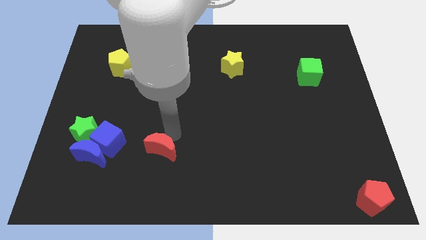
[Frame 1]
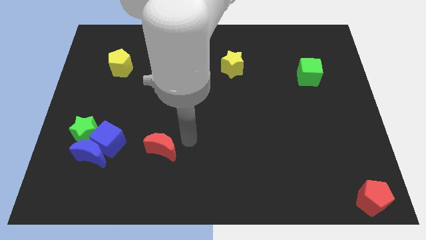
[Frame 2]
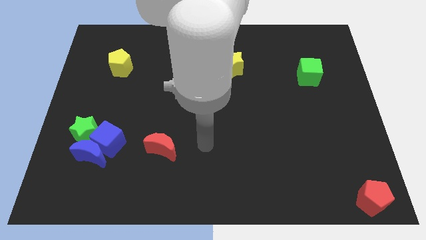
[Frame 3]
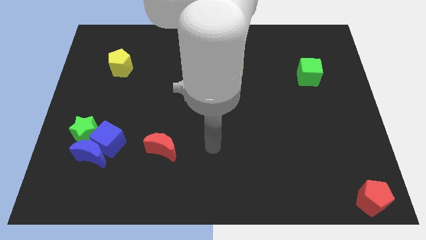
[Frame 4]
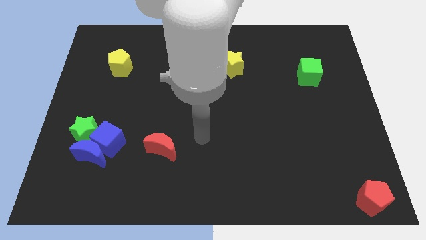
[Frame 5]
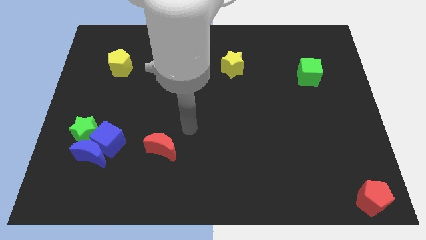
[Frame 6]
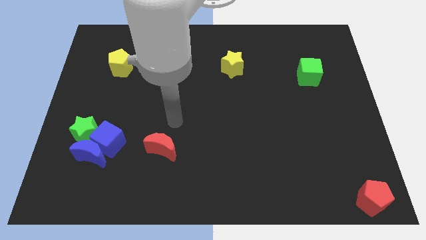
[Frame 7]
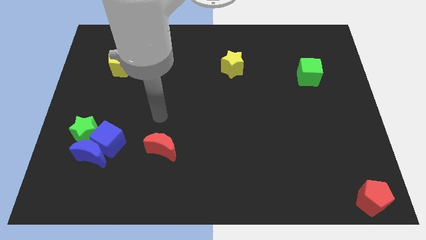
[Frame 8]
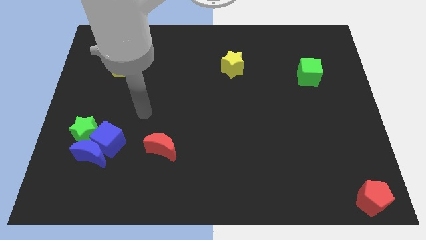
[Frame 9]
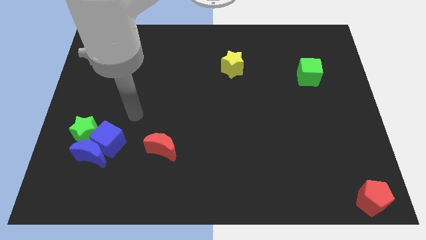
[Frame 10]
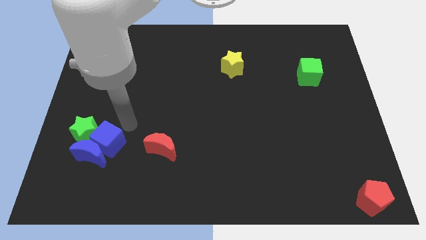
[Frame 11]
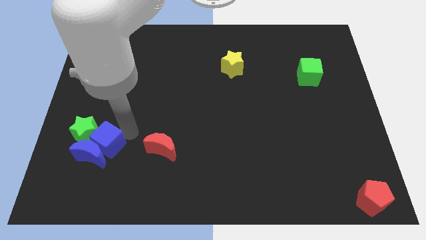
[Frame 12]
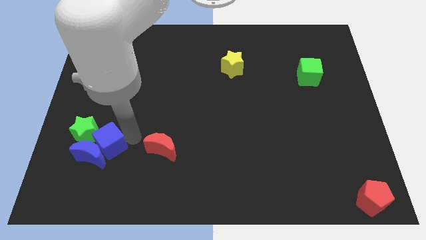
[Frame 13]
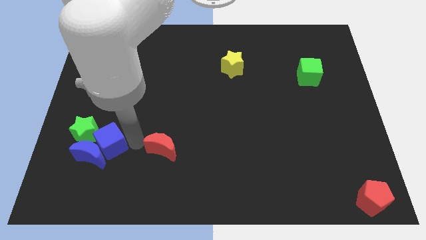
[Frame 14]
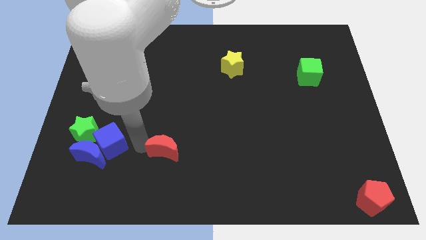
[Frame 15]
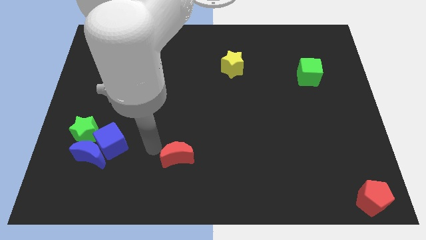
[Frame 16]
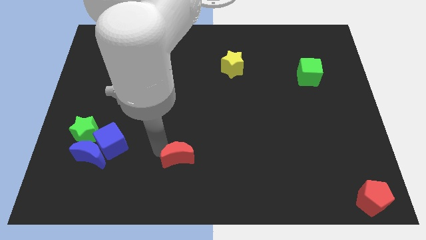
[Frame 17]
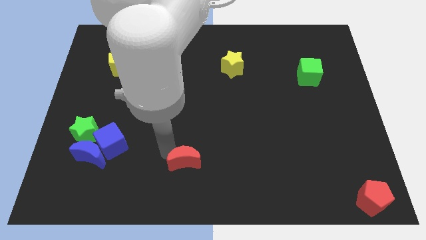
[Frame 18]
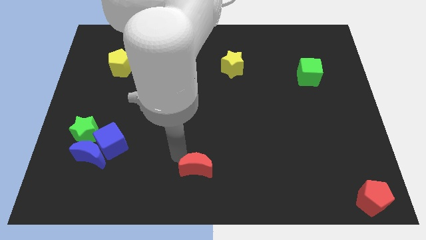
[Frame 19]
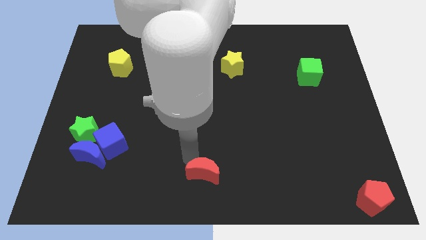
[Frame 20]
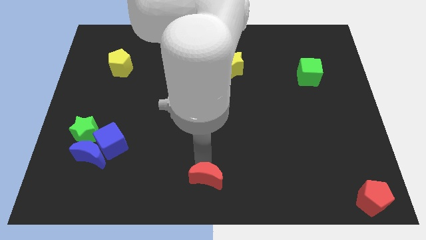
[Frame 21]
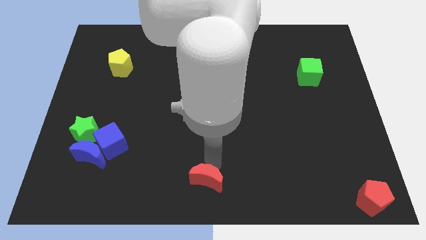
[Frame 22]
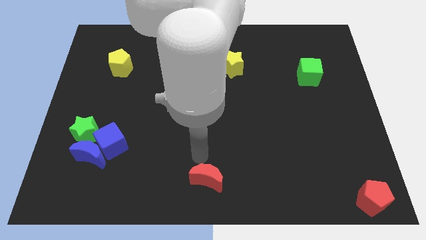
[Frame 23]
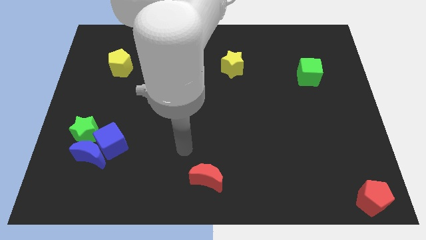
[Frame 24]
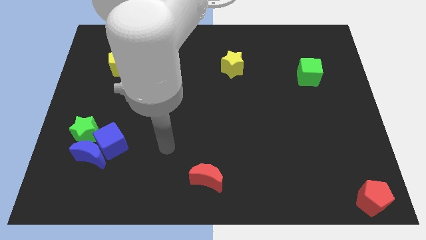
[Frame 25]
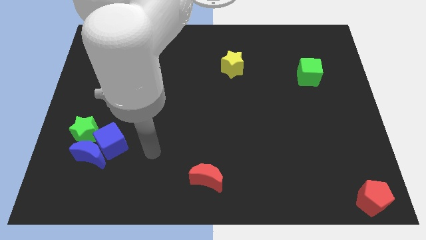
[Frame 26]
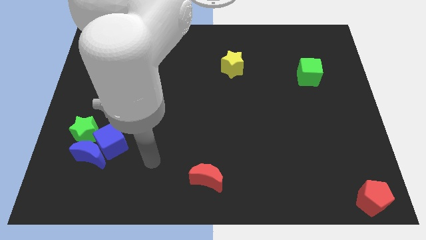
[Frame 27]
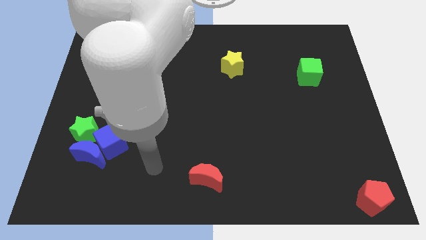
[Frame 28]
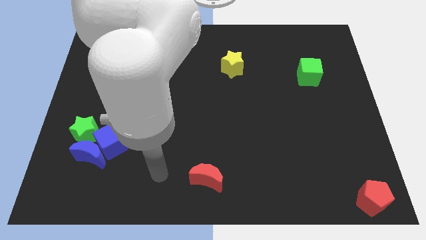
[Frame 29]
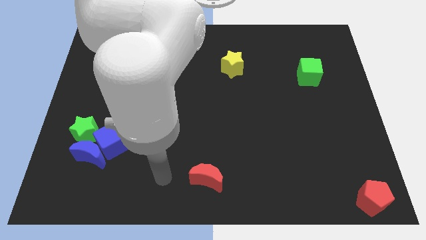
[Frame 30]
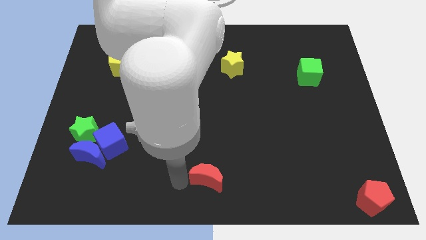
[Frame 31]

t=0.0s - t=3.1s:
move red moon towards bottom center

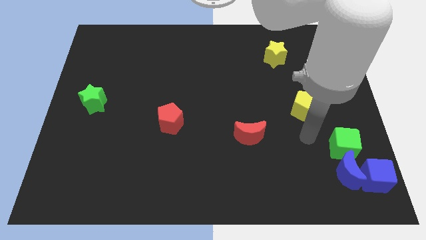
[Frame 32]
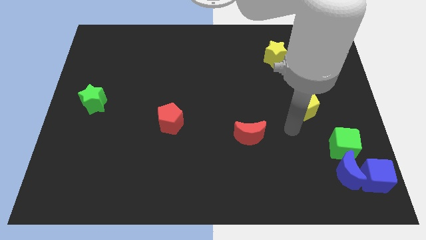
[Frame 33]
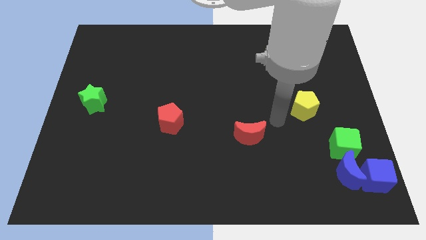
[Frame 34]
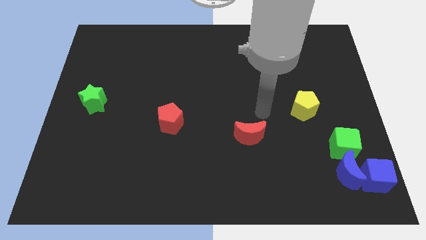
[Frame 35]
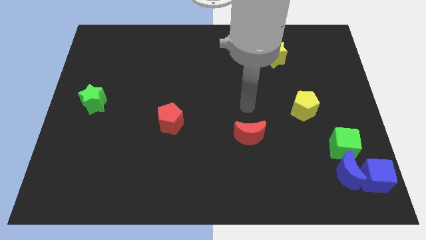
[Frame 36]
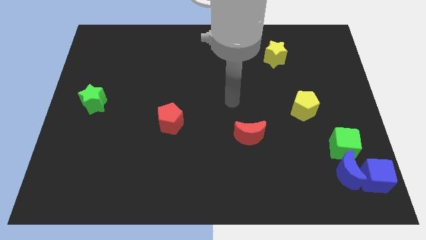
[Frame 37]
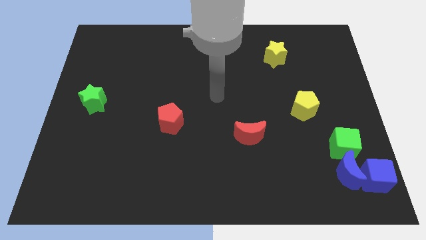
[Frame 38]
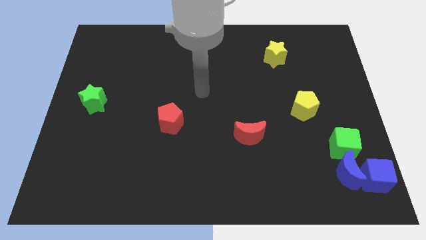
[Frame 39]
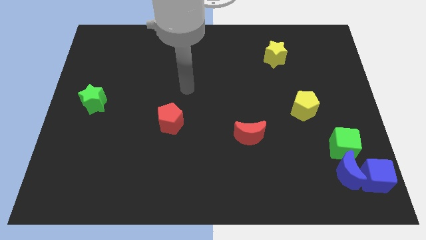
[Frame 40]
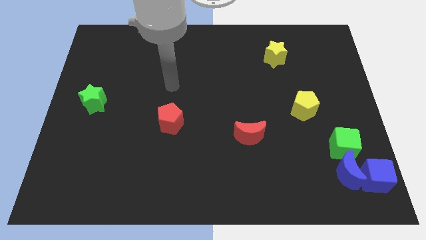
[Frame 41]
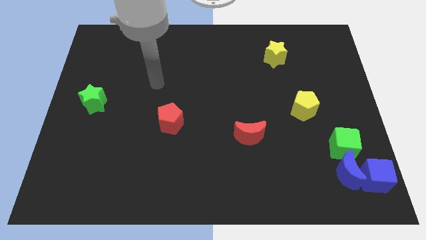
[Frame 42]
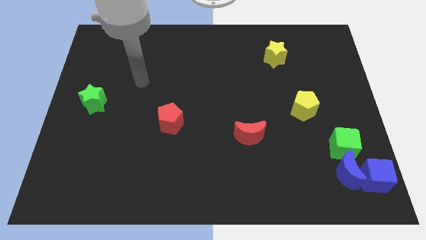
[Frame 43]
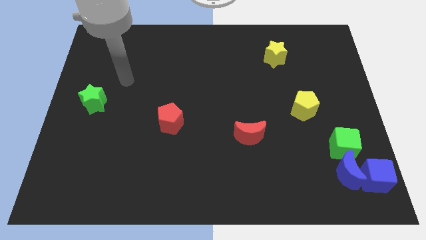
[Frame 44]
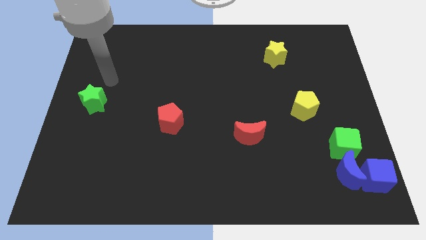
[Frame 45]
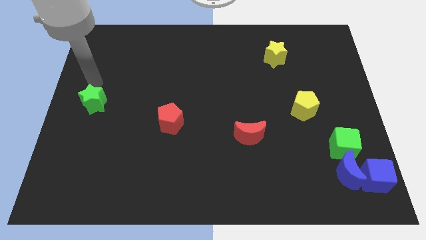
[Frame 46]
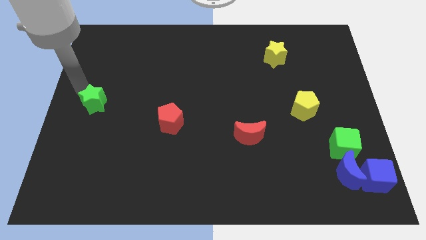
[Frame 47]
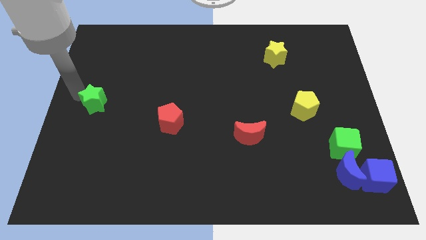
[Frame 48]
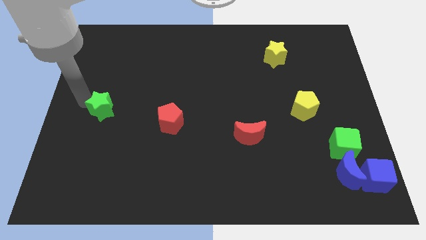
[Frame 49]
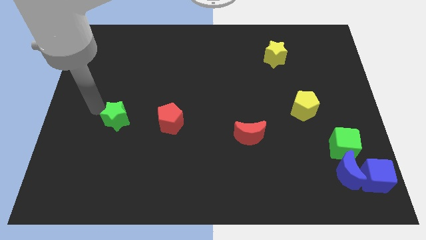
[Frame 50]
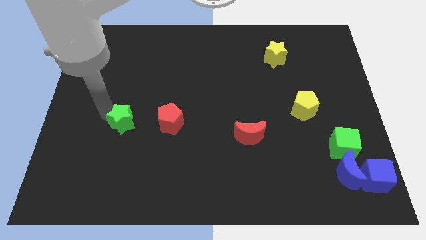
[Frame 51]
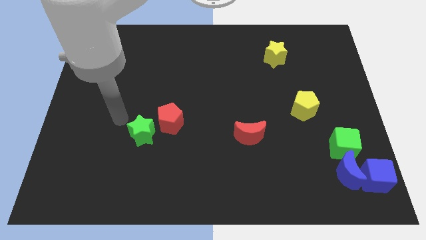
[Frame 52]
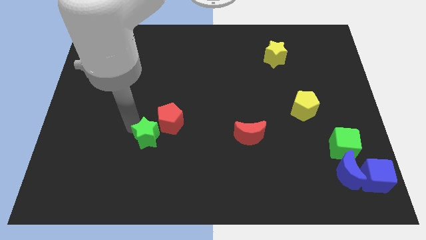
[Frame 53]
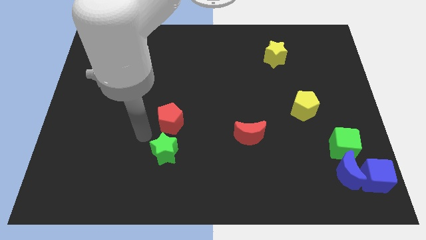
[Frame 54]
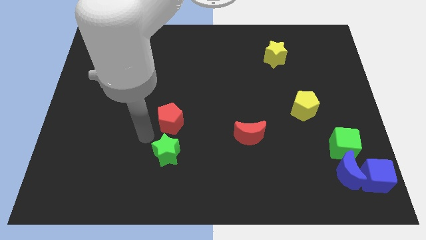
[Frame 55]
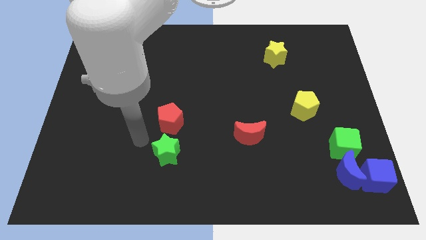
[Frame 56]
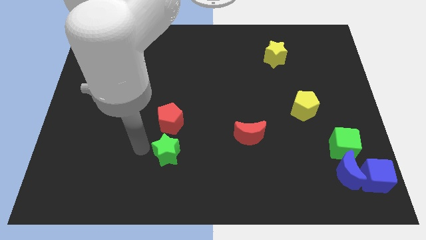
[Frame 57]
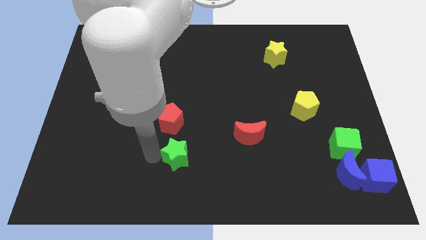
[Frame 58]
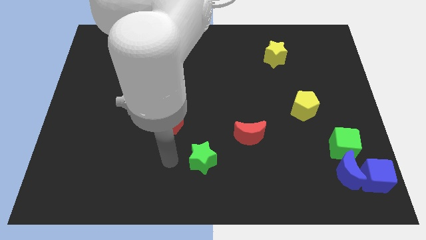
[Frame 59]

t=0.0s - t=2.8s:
place the green star diagonally right of the red pentagon

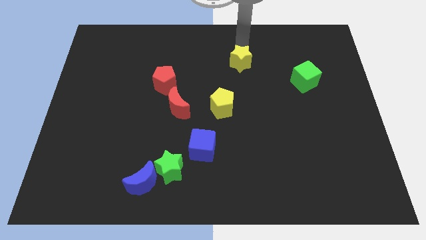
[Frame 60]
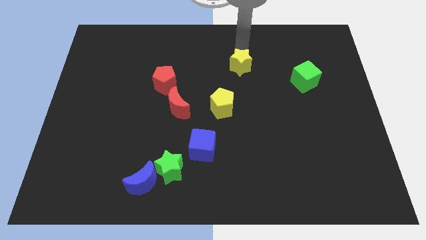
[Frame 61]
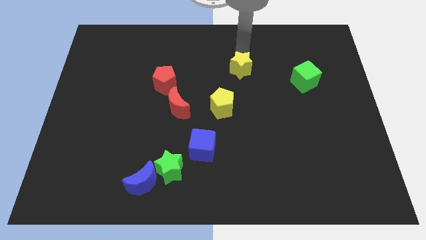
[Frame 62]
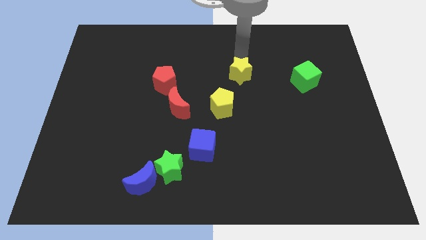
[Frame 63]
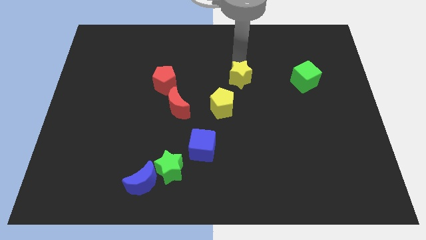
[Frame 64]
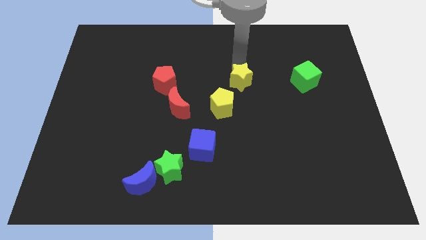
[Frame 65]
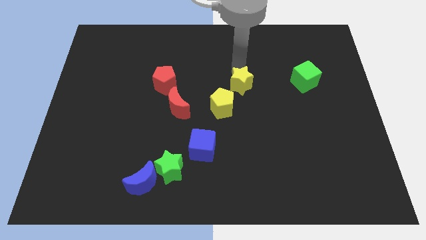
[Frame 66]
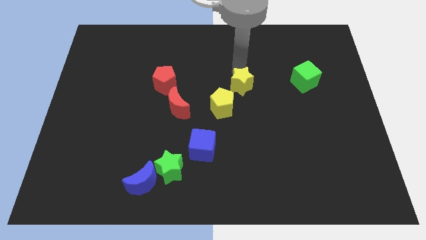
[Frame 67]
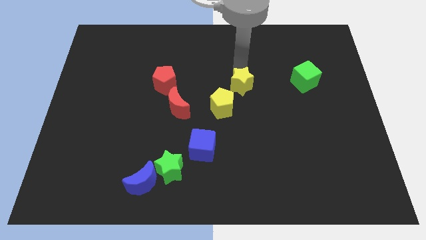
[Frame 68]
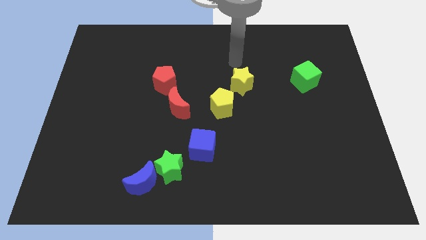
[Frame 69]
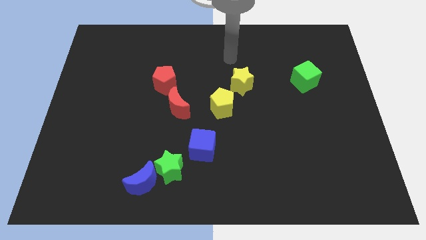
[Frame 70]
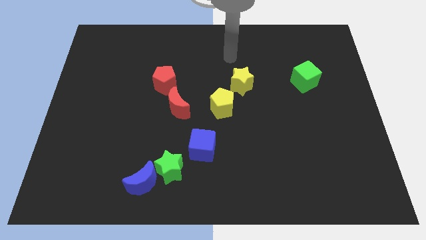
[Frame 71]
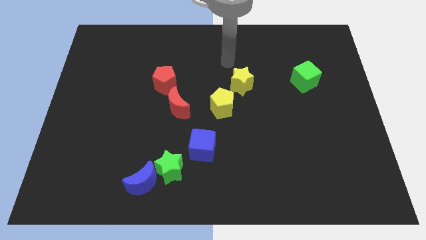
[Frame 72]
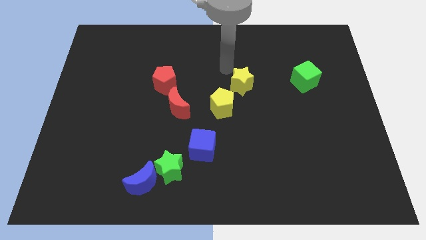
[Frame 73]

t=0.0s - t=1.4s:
slightly move the yellow star towards down

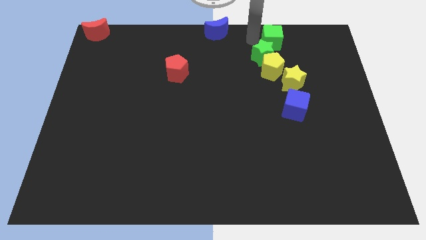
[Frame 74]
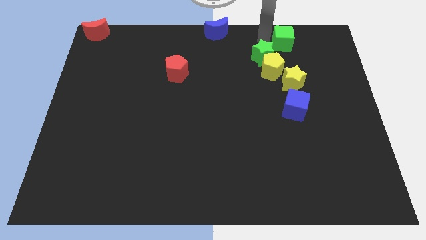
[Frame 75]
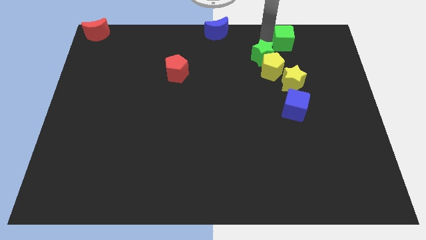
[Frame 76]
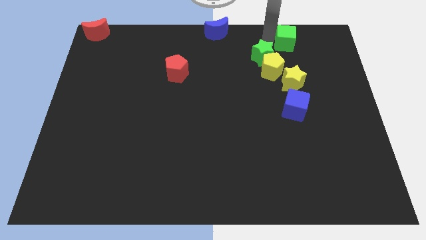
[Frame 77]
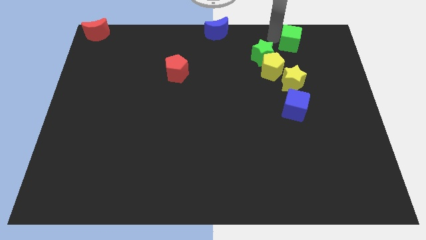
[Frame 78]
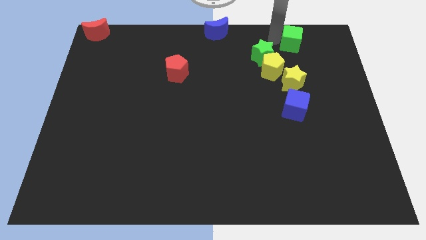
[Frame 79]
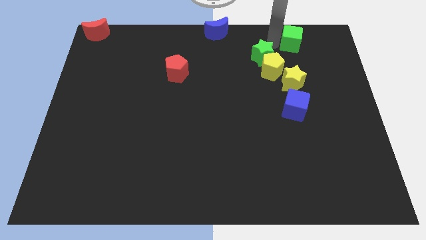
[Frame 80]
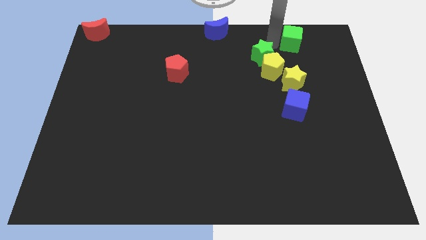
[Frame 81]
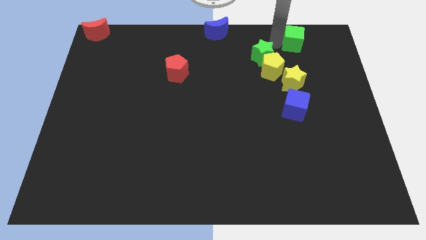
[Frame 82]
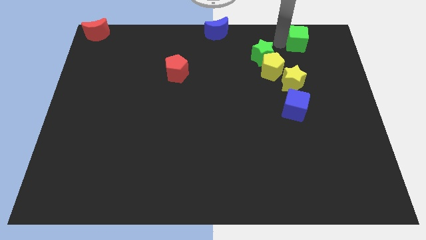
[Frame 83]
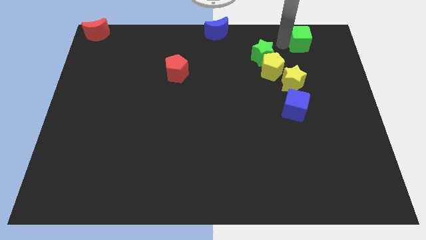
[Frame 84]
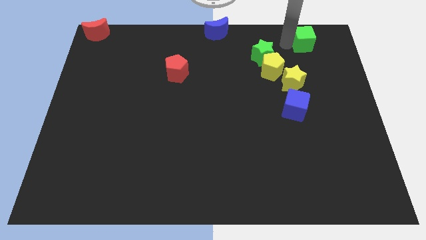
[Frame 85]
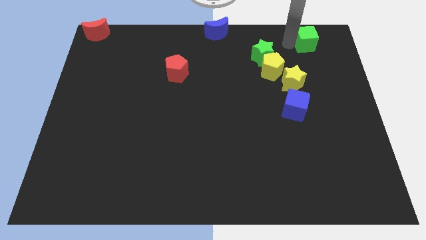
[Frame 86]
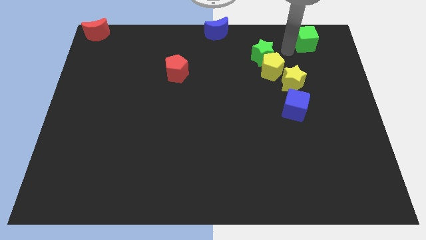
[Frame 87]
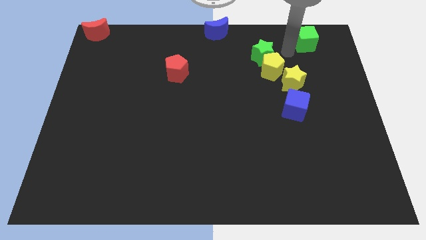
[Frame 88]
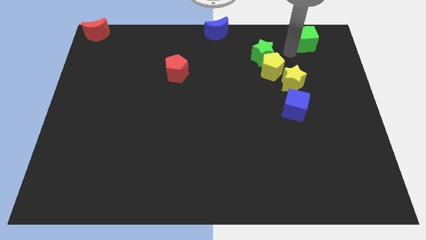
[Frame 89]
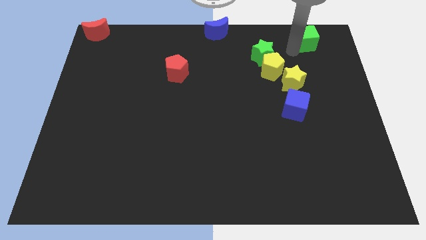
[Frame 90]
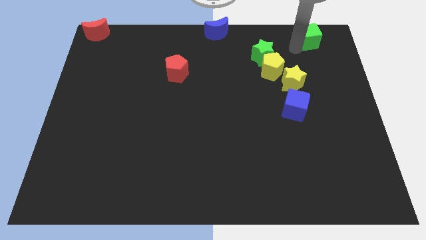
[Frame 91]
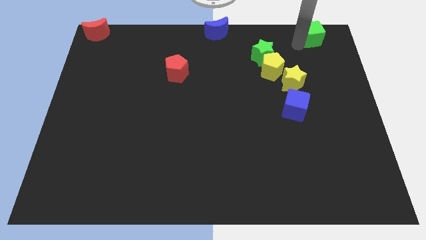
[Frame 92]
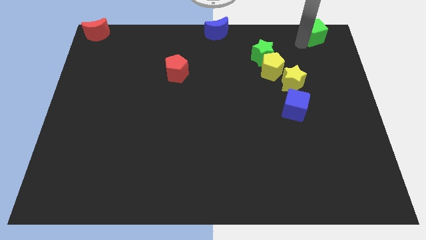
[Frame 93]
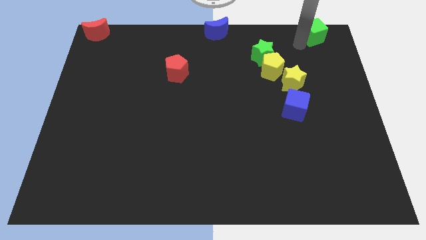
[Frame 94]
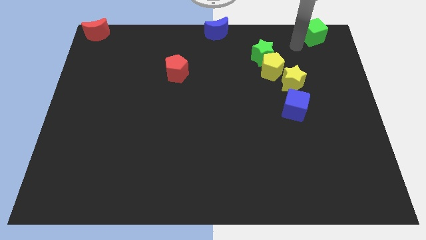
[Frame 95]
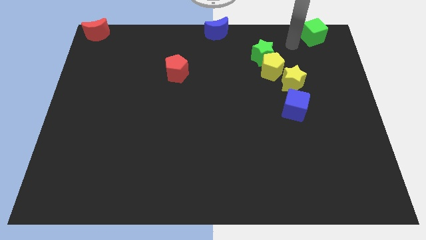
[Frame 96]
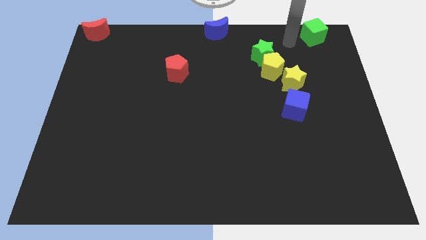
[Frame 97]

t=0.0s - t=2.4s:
slide the green cube towards the top right
